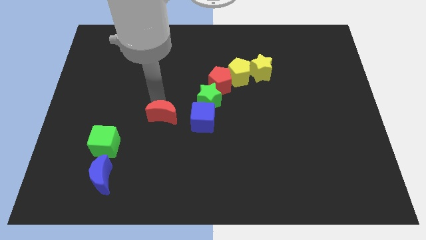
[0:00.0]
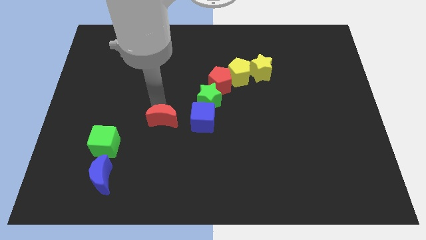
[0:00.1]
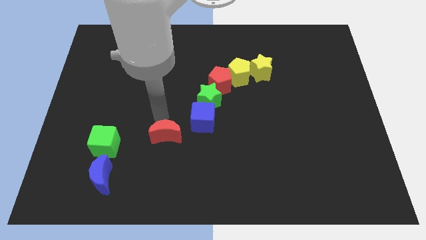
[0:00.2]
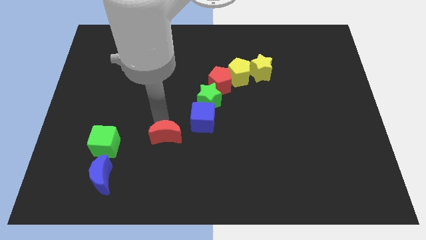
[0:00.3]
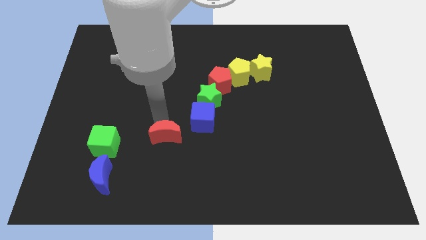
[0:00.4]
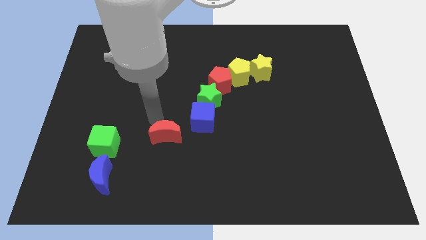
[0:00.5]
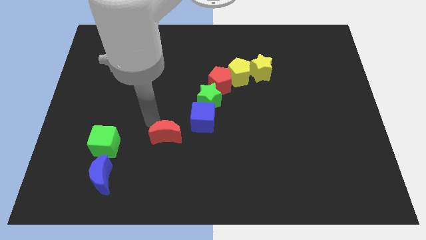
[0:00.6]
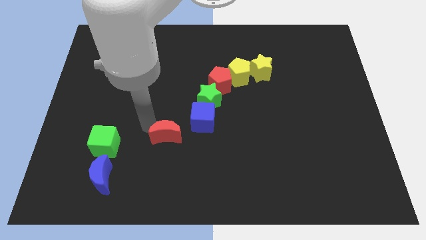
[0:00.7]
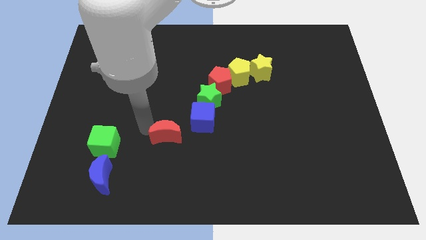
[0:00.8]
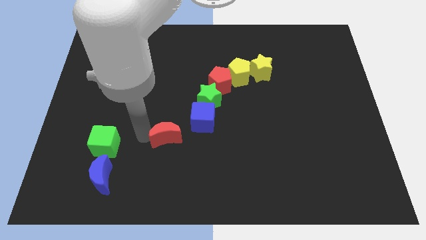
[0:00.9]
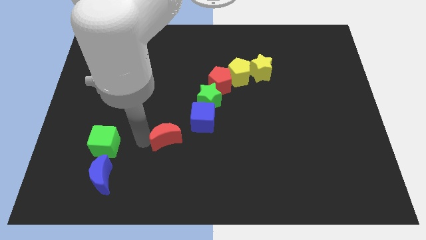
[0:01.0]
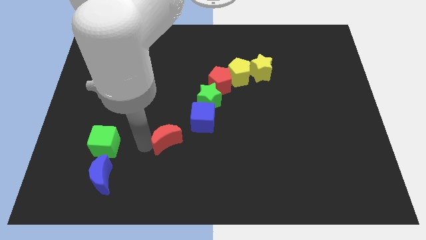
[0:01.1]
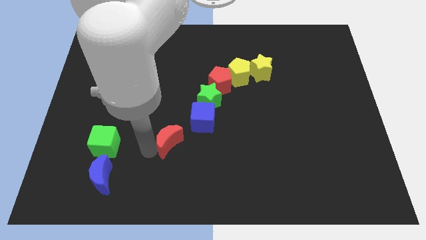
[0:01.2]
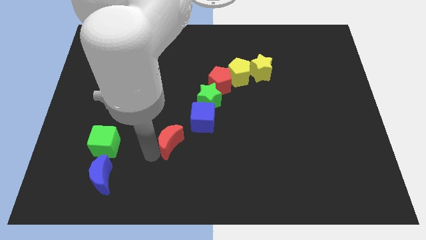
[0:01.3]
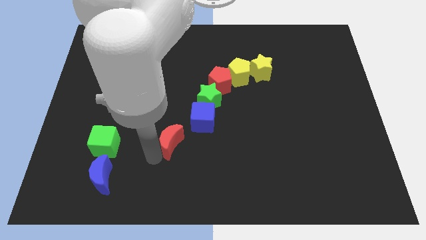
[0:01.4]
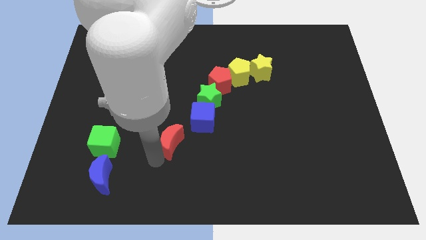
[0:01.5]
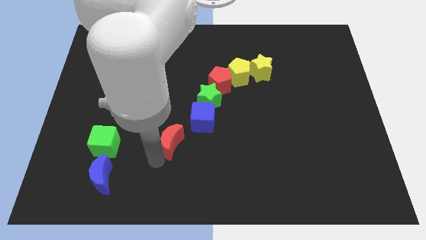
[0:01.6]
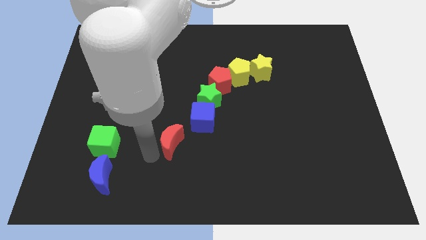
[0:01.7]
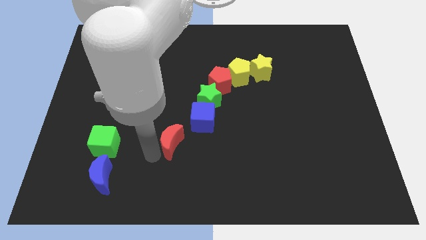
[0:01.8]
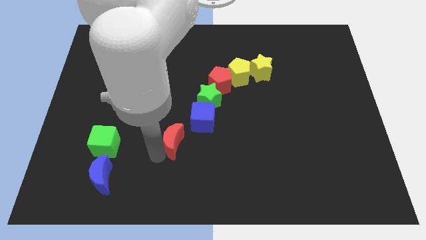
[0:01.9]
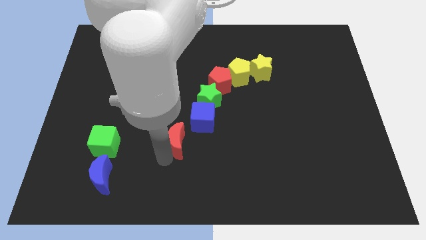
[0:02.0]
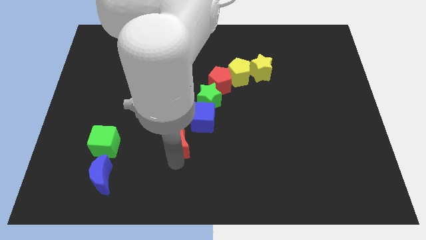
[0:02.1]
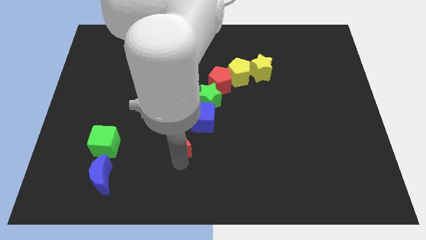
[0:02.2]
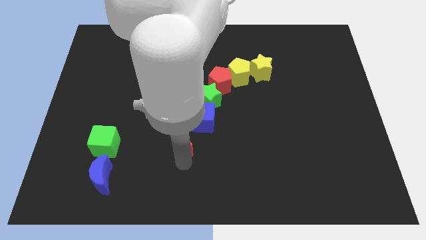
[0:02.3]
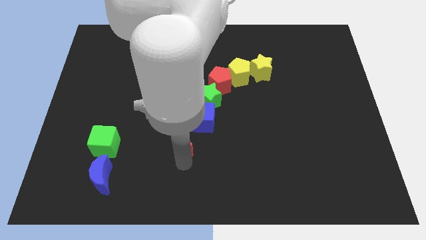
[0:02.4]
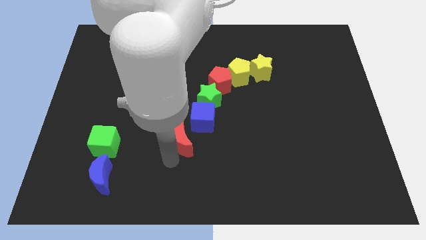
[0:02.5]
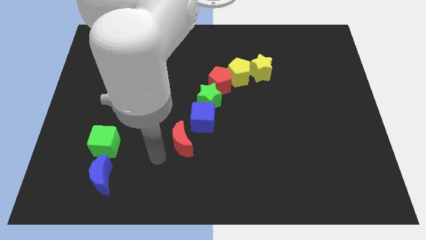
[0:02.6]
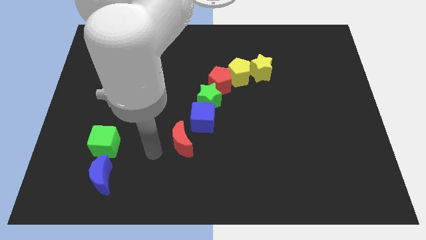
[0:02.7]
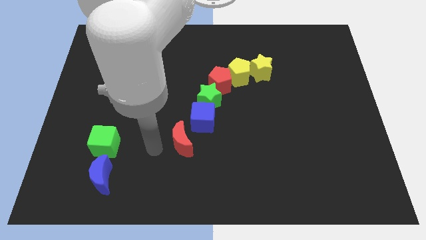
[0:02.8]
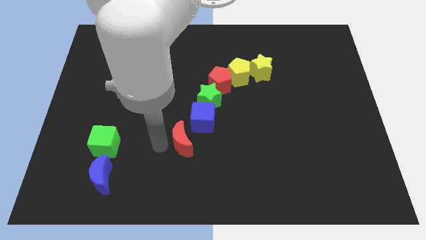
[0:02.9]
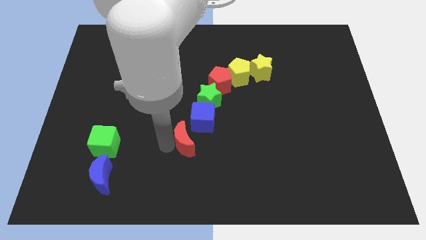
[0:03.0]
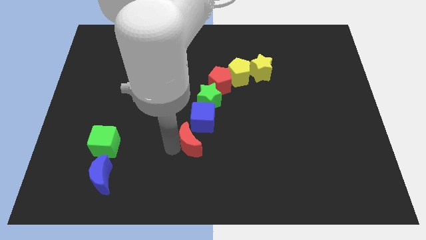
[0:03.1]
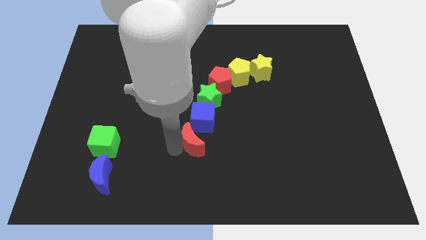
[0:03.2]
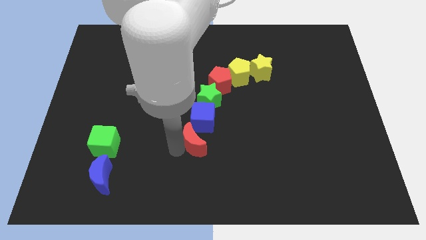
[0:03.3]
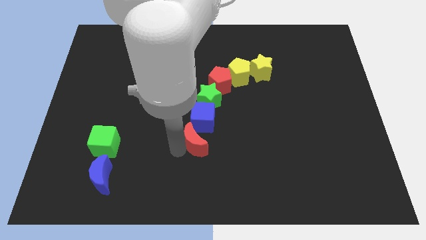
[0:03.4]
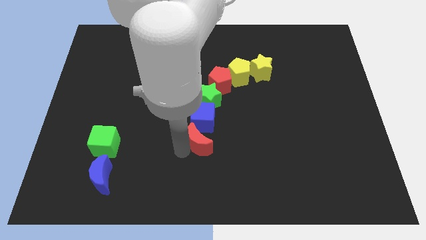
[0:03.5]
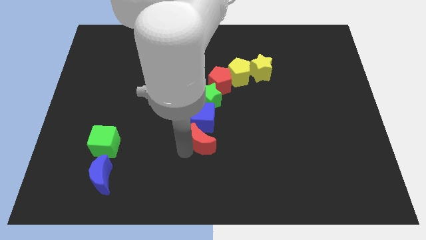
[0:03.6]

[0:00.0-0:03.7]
drag the red moon below the blue cube

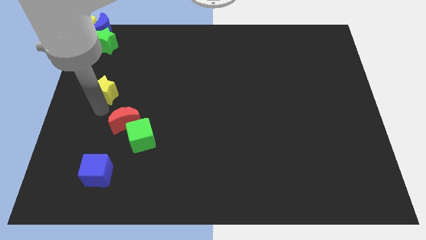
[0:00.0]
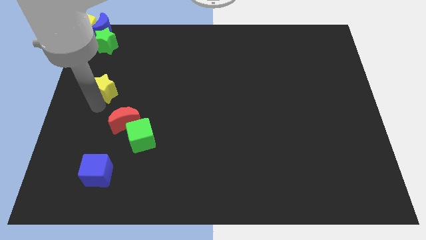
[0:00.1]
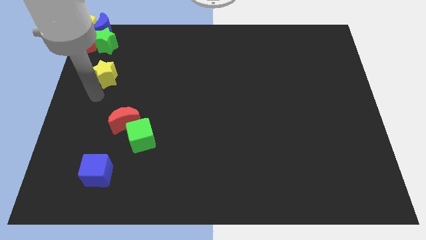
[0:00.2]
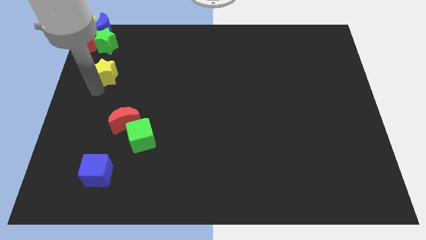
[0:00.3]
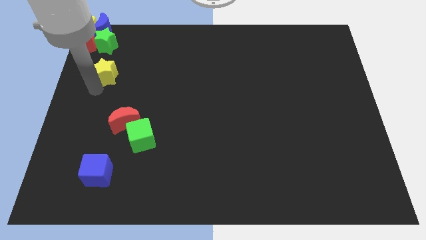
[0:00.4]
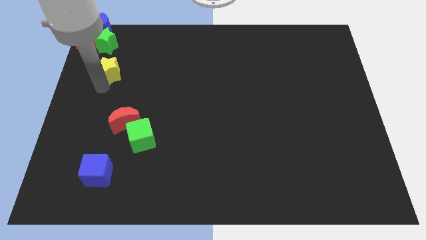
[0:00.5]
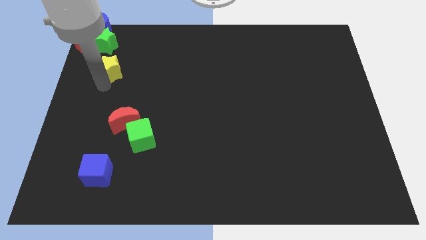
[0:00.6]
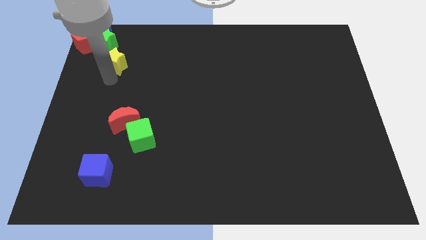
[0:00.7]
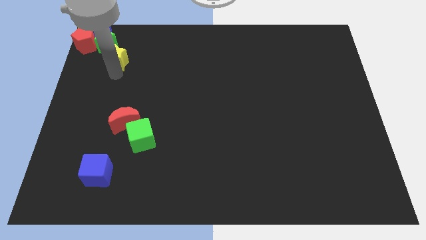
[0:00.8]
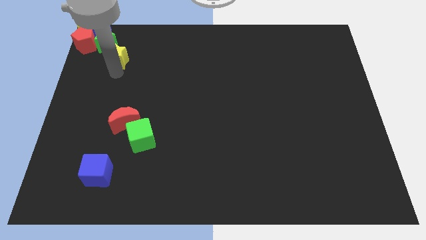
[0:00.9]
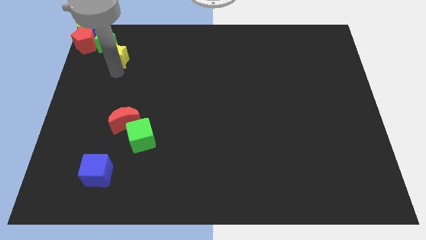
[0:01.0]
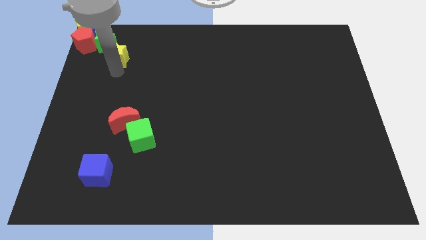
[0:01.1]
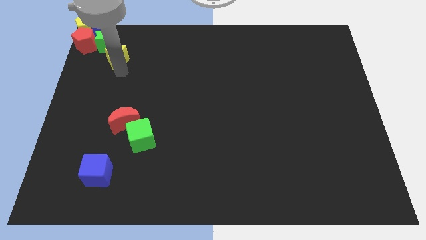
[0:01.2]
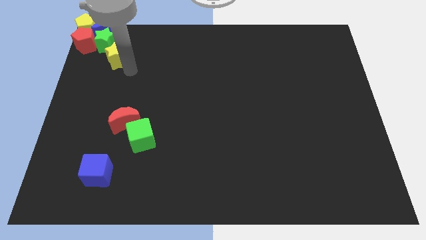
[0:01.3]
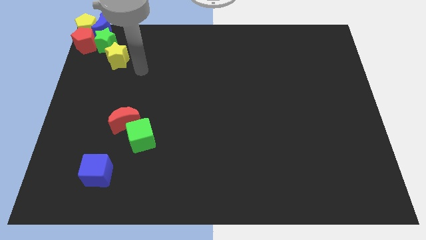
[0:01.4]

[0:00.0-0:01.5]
place the yellow star at the bottom right side of green star

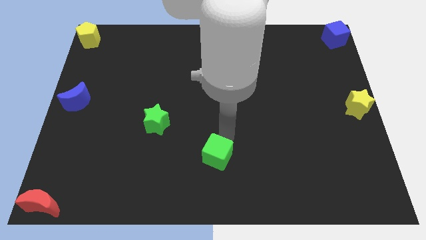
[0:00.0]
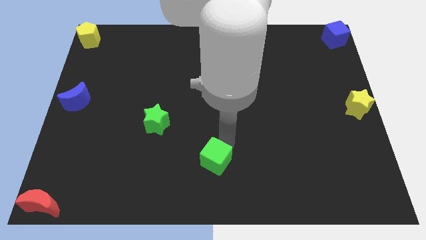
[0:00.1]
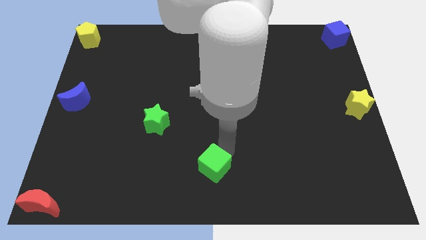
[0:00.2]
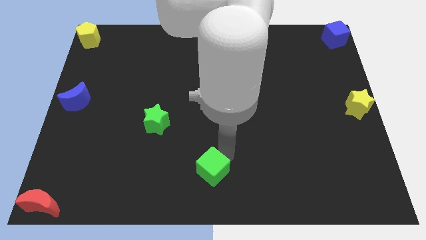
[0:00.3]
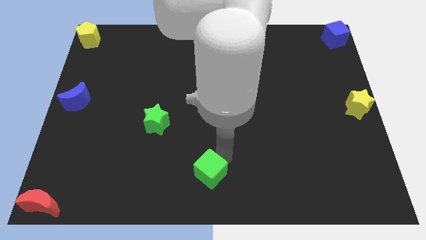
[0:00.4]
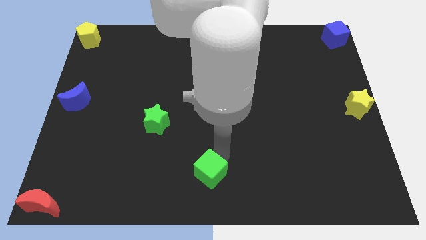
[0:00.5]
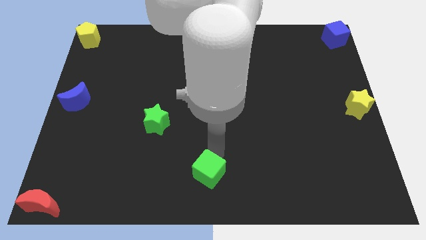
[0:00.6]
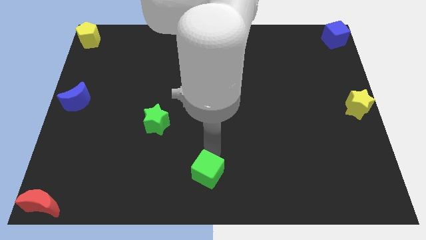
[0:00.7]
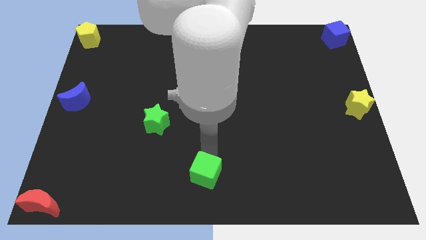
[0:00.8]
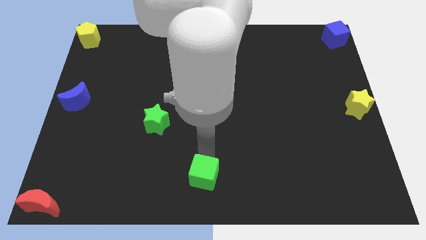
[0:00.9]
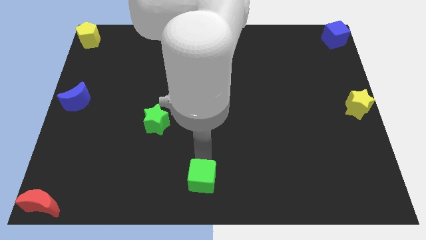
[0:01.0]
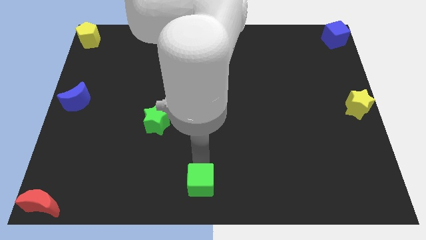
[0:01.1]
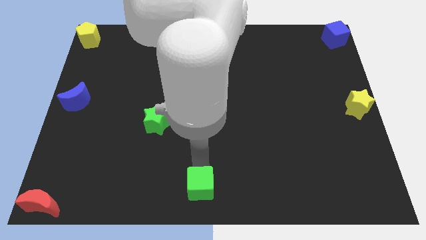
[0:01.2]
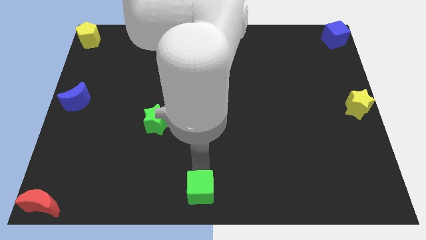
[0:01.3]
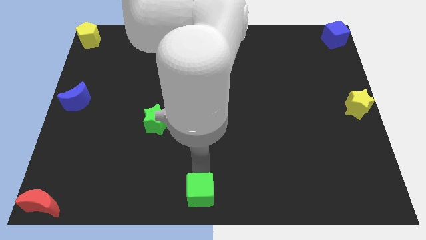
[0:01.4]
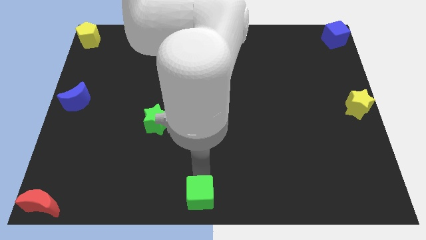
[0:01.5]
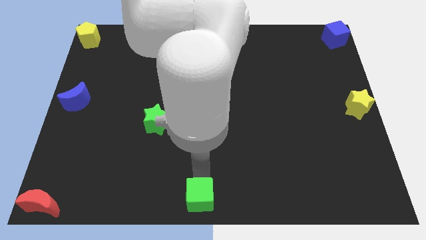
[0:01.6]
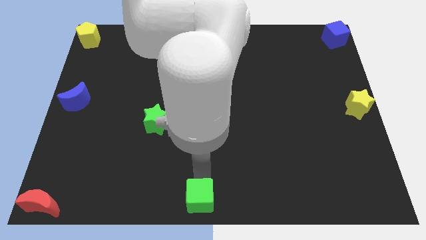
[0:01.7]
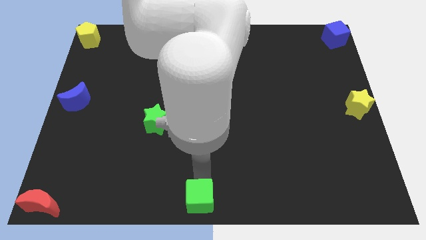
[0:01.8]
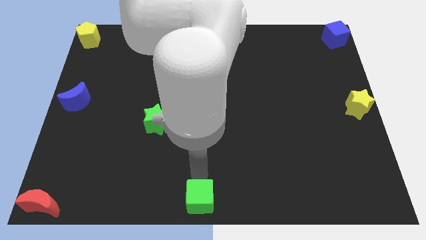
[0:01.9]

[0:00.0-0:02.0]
move the green cube to the bottom center

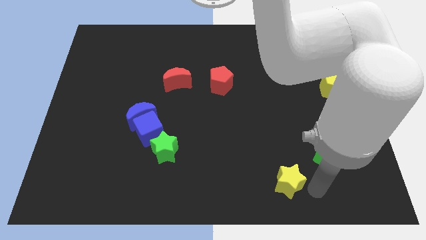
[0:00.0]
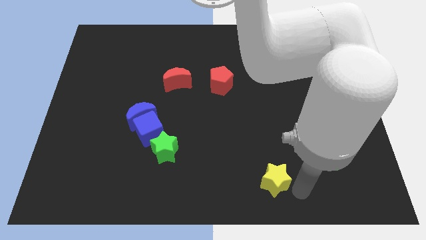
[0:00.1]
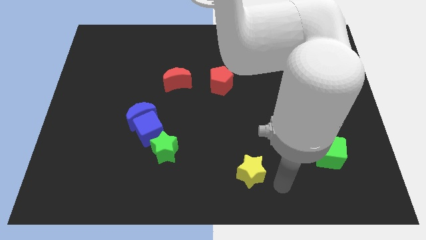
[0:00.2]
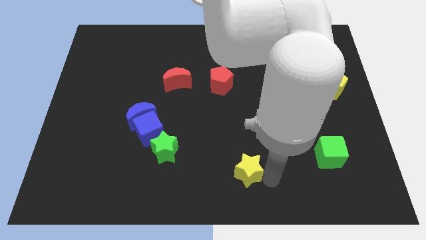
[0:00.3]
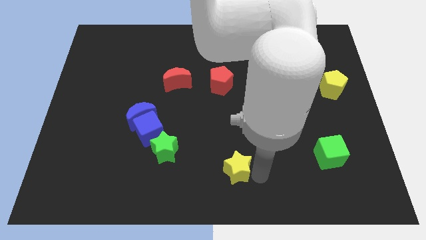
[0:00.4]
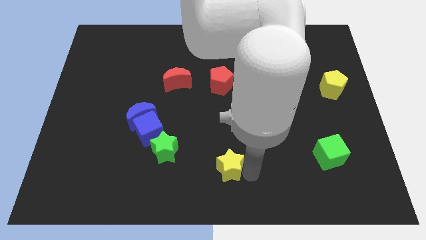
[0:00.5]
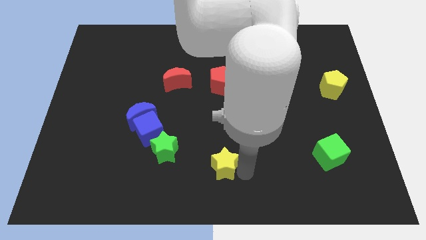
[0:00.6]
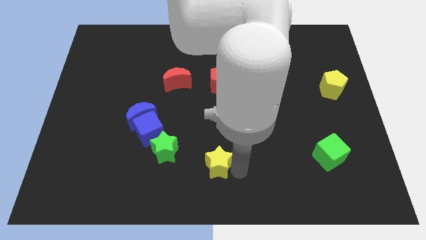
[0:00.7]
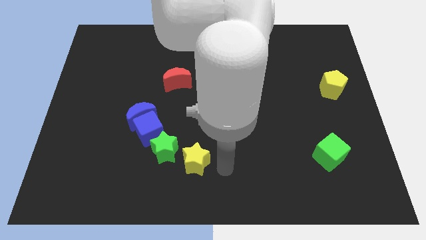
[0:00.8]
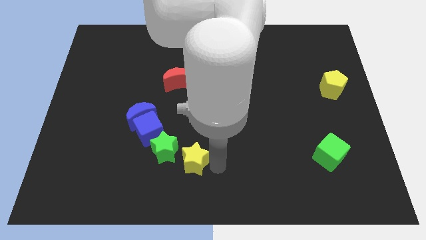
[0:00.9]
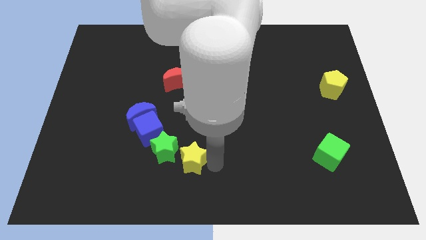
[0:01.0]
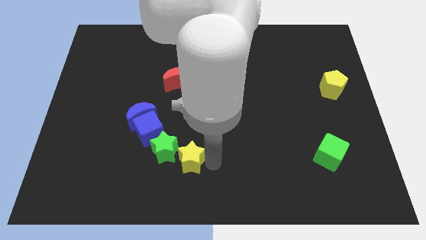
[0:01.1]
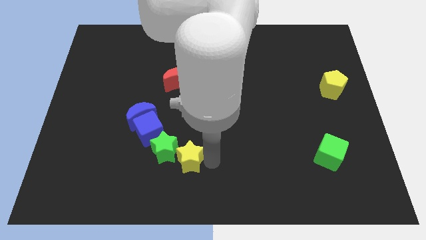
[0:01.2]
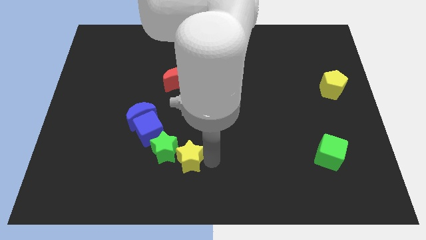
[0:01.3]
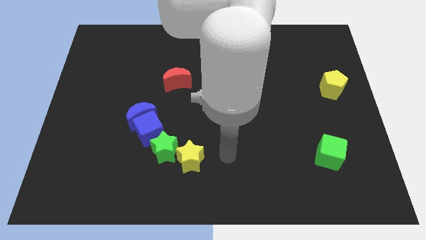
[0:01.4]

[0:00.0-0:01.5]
place the yellow star diagonally to the green star

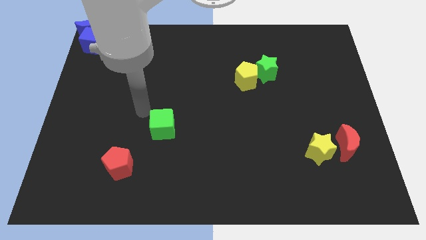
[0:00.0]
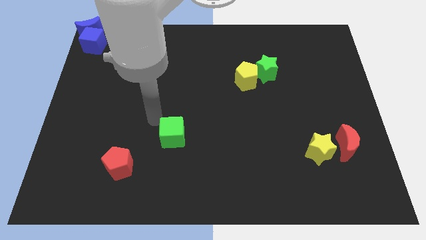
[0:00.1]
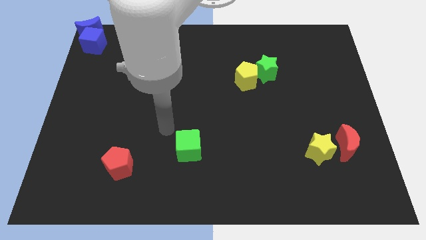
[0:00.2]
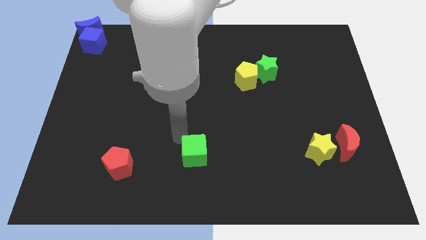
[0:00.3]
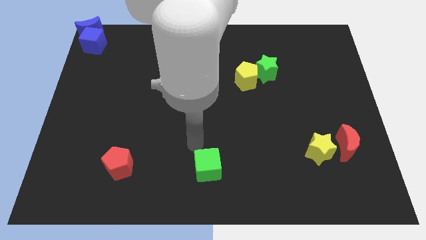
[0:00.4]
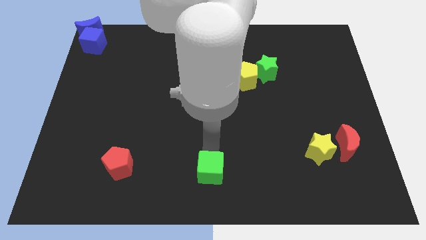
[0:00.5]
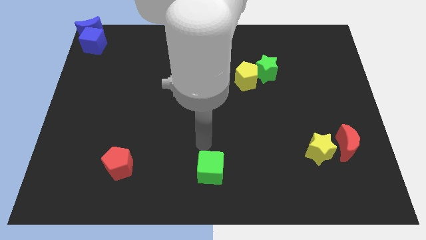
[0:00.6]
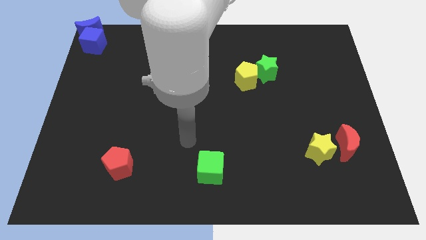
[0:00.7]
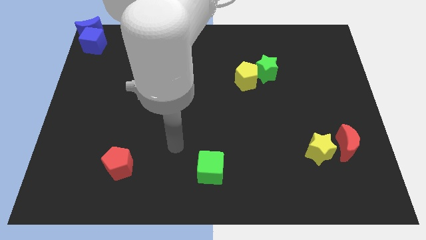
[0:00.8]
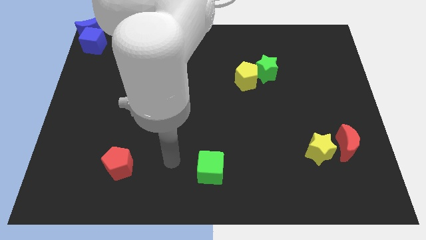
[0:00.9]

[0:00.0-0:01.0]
place the green cube horizontal right to red pentagon
